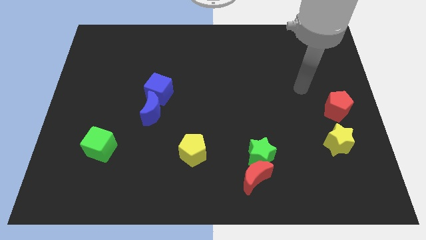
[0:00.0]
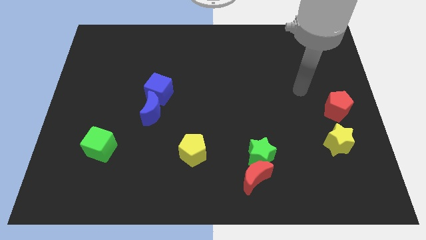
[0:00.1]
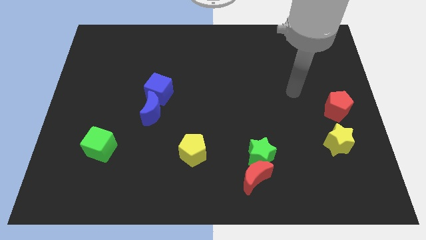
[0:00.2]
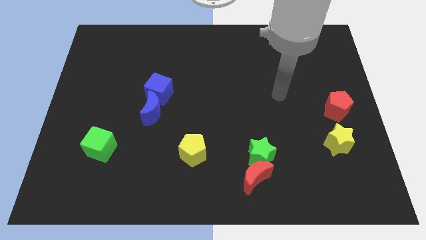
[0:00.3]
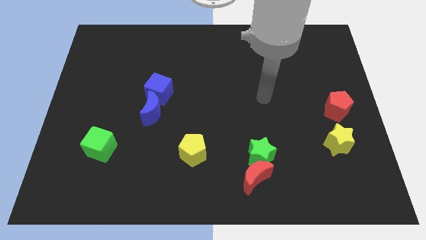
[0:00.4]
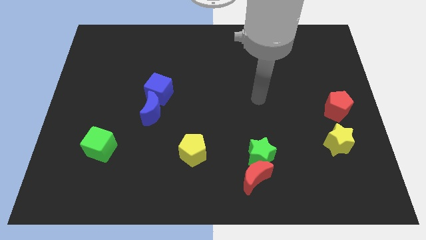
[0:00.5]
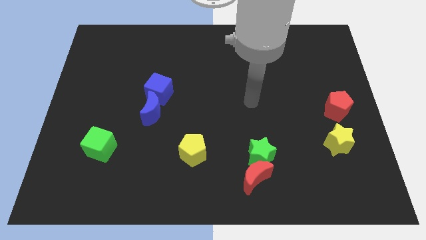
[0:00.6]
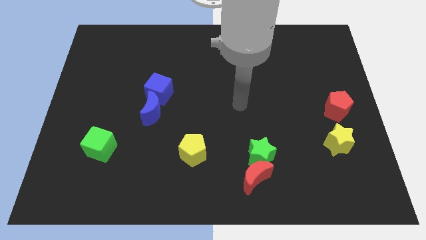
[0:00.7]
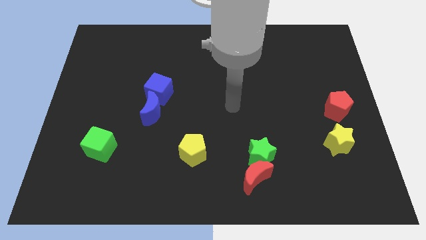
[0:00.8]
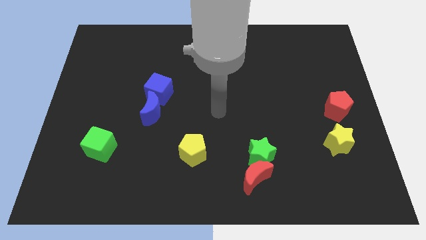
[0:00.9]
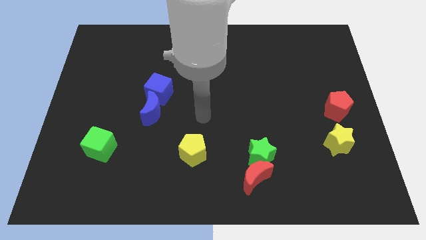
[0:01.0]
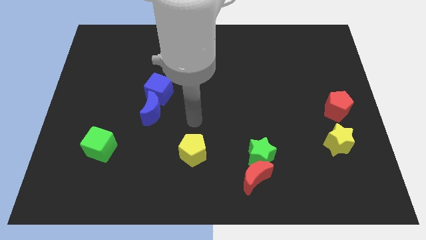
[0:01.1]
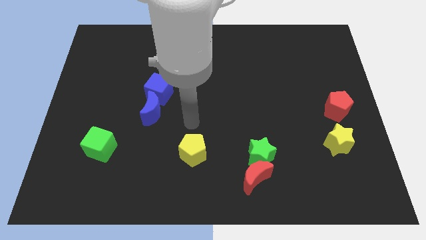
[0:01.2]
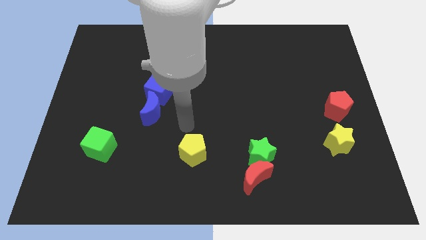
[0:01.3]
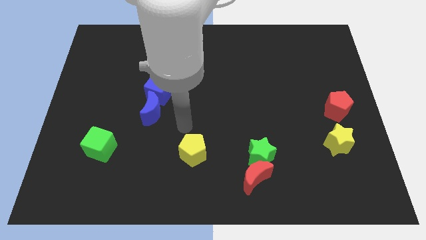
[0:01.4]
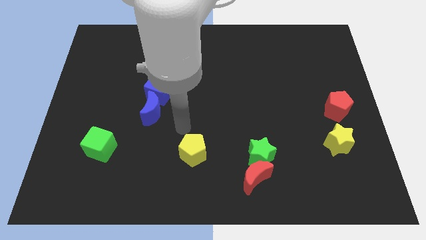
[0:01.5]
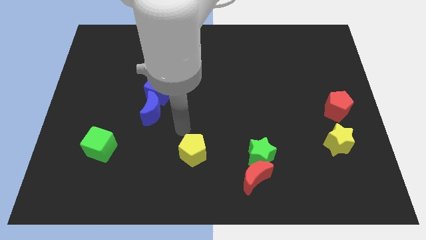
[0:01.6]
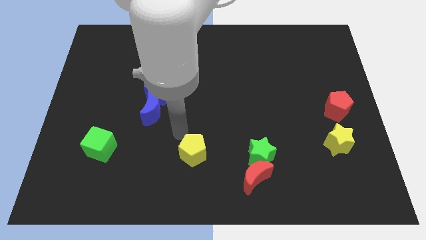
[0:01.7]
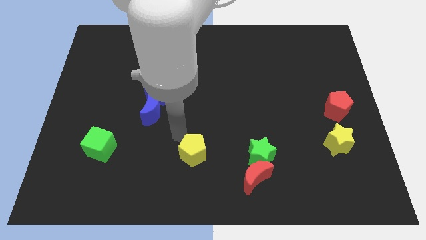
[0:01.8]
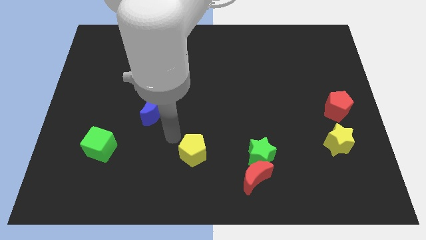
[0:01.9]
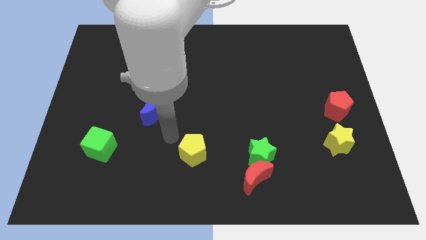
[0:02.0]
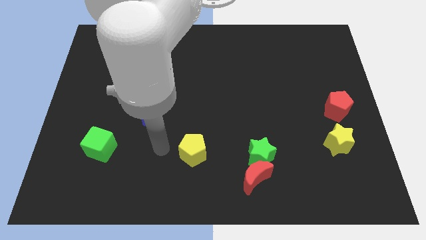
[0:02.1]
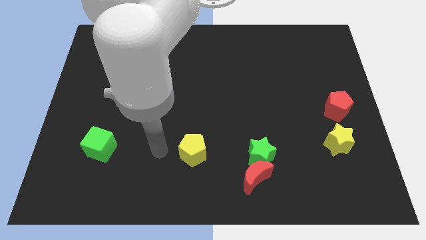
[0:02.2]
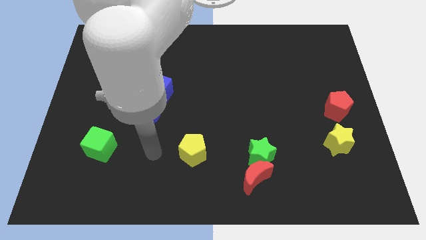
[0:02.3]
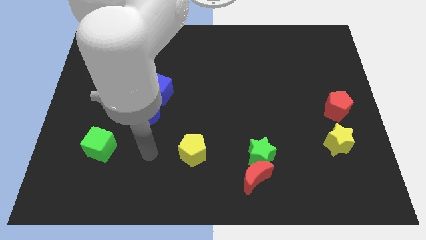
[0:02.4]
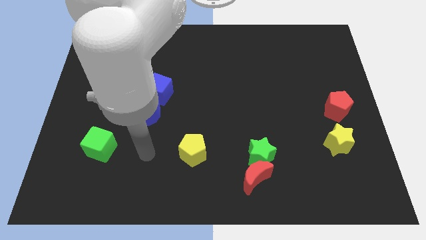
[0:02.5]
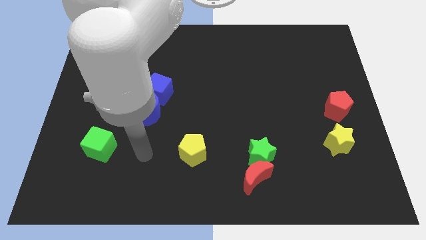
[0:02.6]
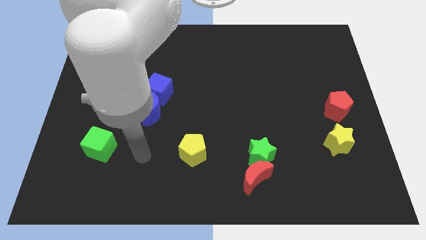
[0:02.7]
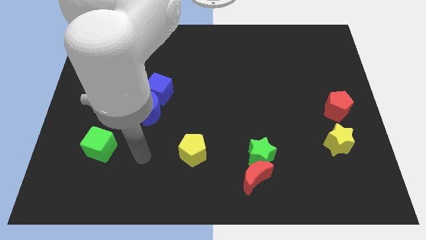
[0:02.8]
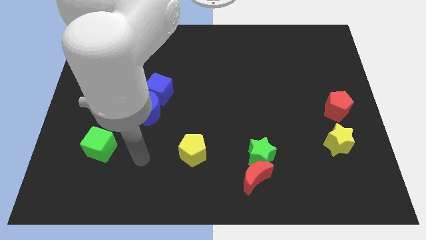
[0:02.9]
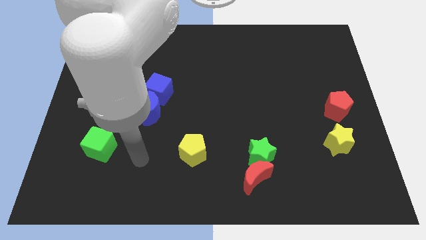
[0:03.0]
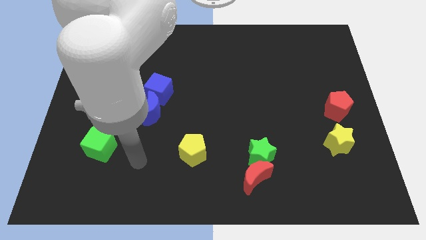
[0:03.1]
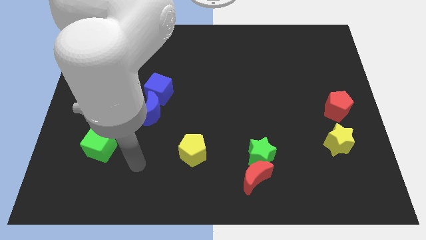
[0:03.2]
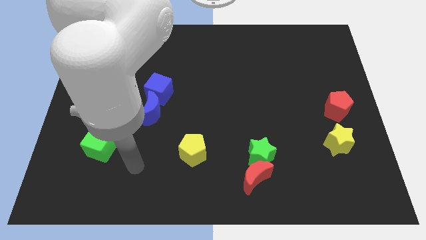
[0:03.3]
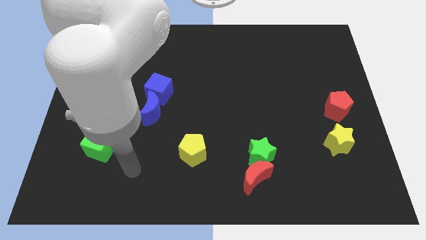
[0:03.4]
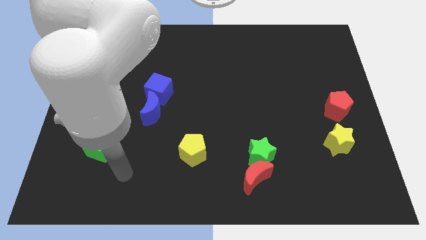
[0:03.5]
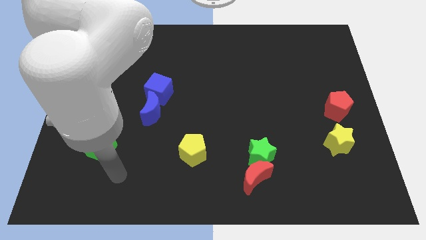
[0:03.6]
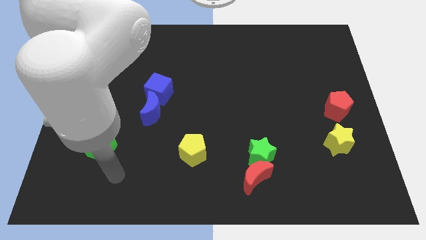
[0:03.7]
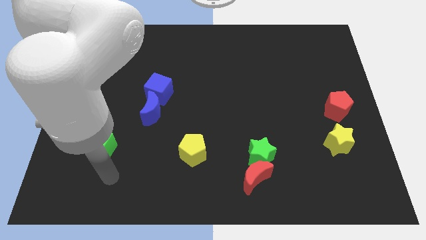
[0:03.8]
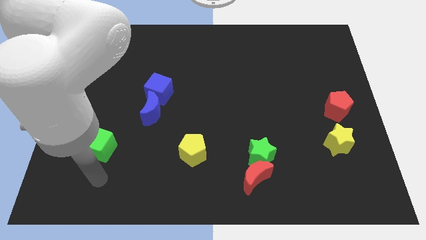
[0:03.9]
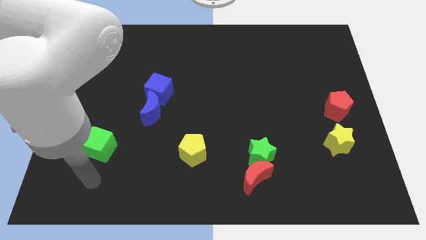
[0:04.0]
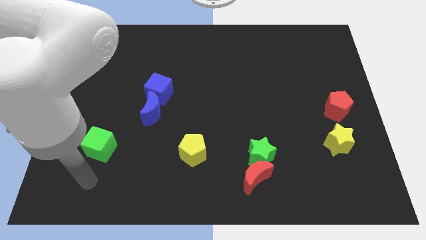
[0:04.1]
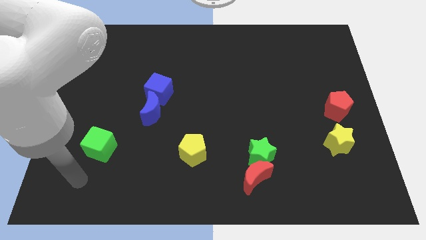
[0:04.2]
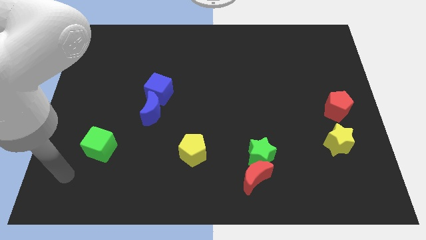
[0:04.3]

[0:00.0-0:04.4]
move your arm below the green cube

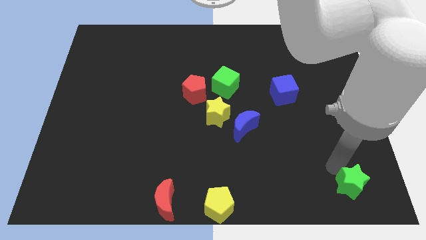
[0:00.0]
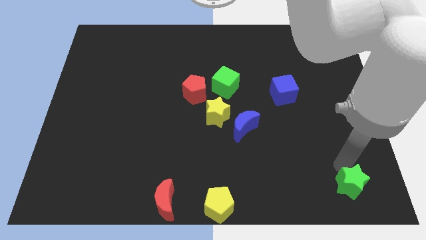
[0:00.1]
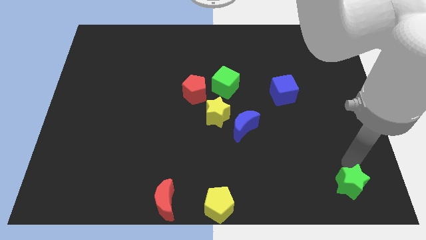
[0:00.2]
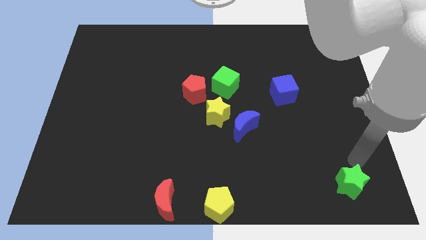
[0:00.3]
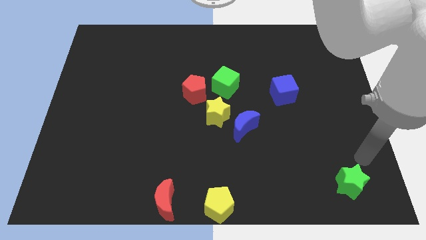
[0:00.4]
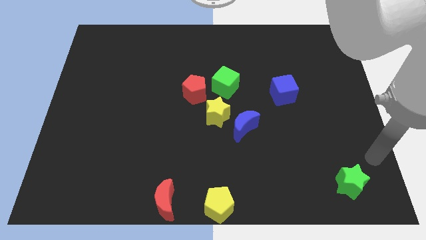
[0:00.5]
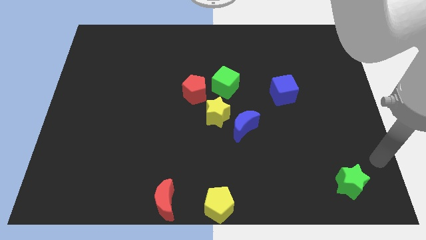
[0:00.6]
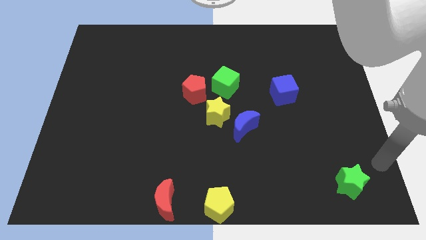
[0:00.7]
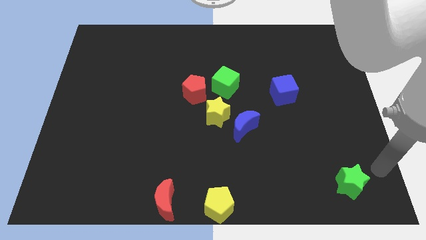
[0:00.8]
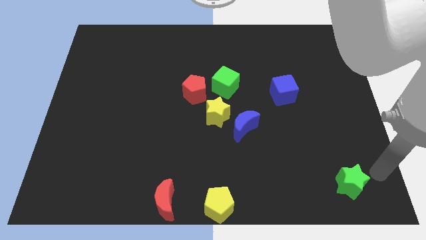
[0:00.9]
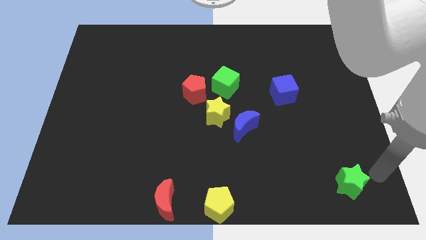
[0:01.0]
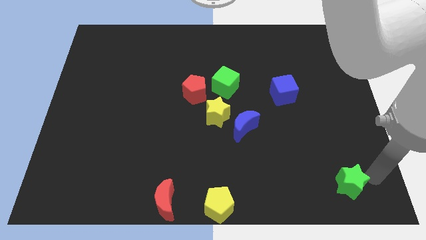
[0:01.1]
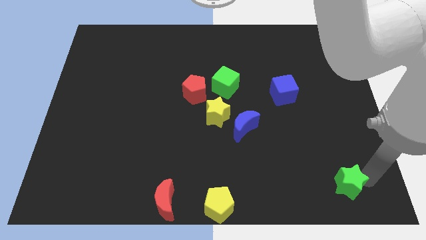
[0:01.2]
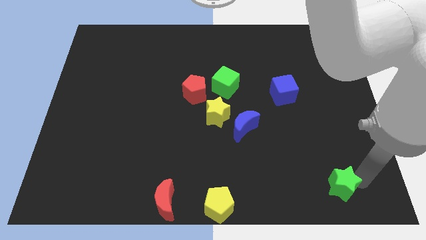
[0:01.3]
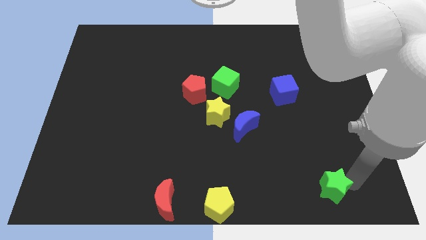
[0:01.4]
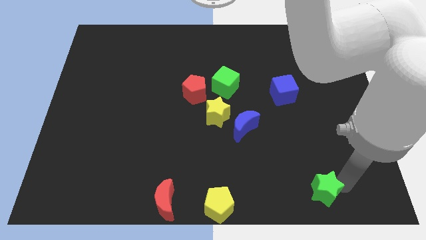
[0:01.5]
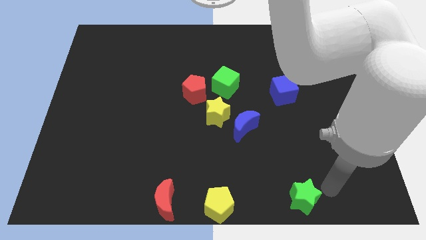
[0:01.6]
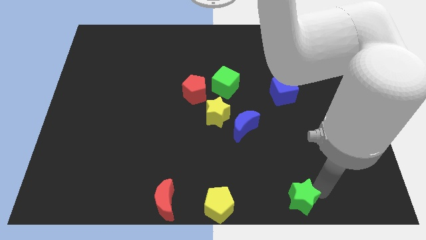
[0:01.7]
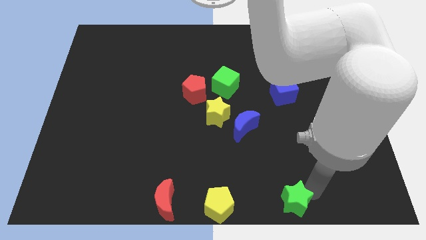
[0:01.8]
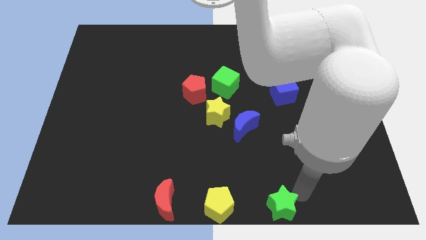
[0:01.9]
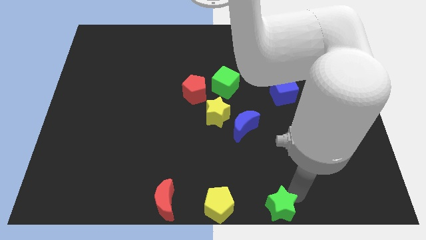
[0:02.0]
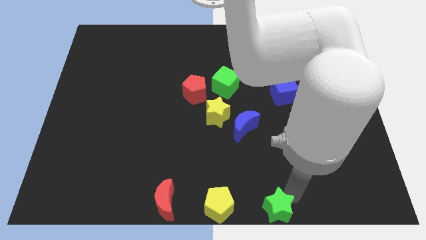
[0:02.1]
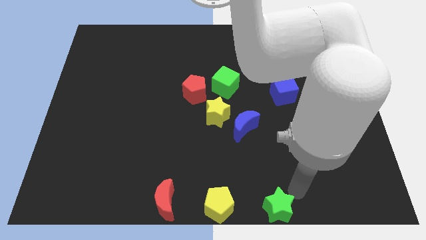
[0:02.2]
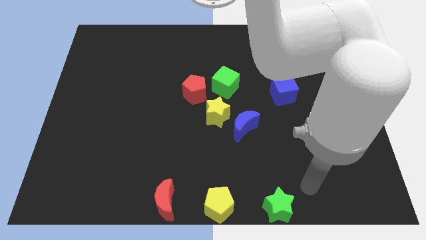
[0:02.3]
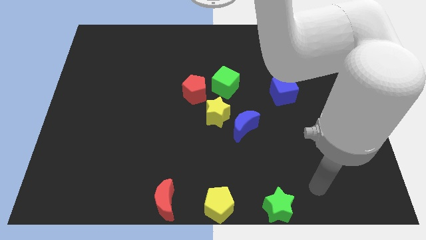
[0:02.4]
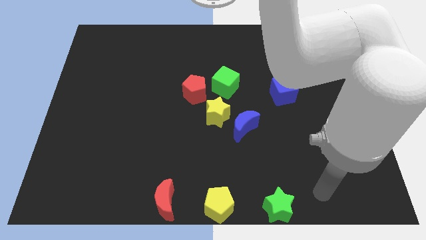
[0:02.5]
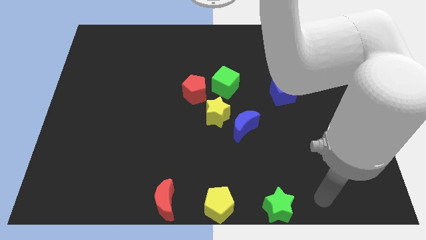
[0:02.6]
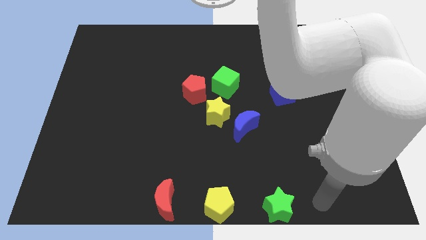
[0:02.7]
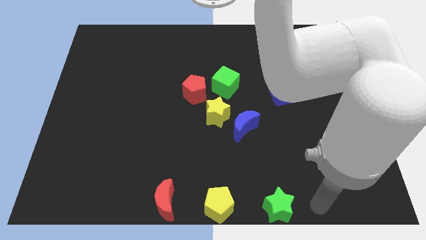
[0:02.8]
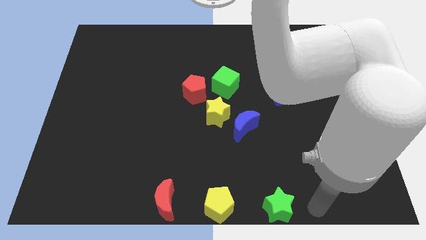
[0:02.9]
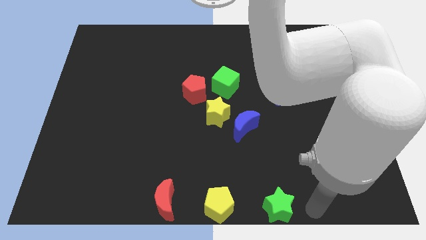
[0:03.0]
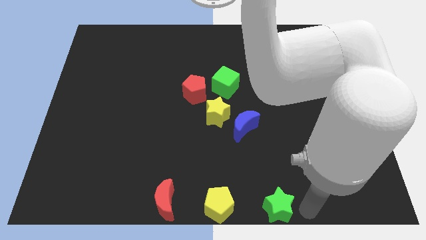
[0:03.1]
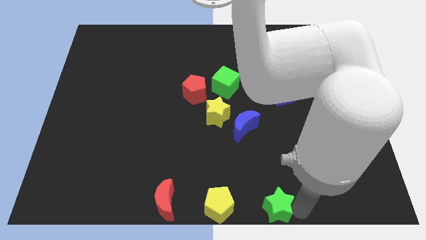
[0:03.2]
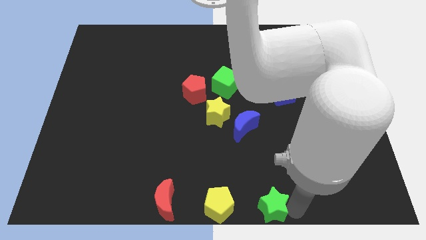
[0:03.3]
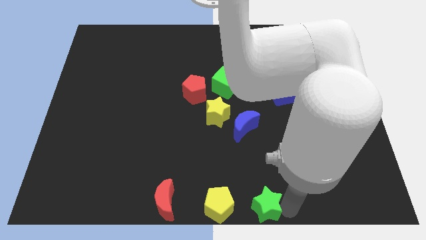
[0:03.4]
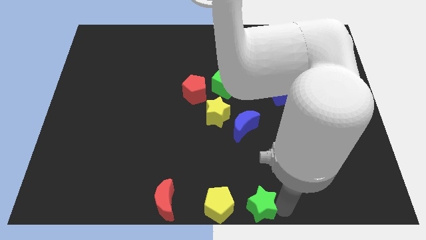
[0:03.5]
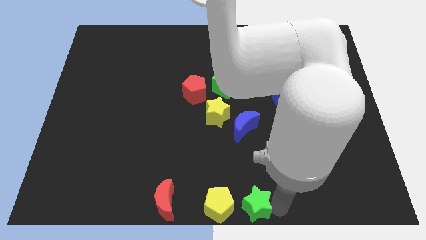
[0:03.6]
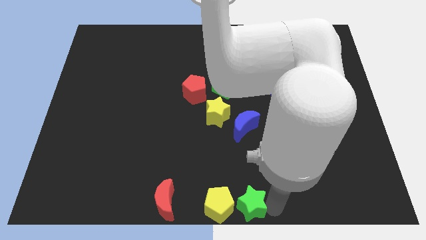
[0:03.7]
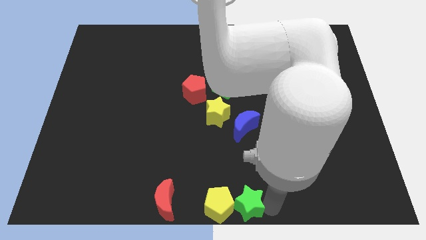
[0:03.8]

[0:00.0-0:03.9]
place the green star to the right side of the yellow pentagon

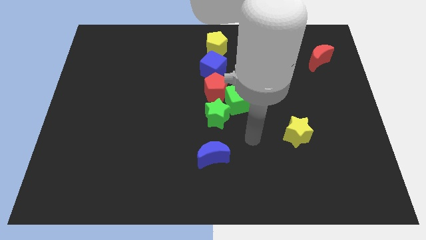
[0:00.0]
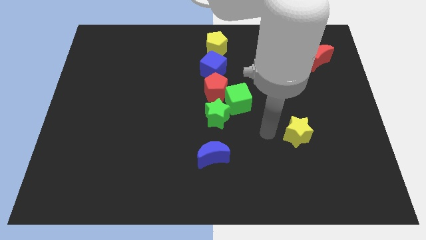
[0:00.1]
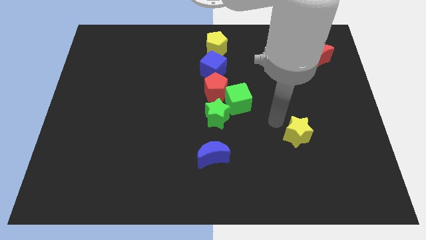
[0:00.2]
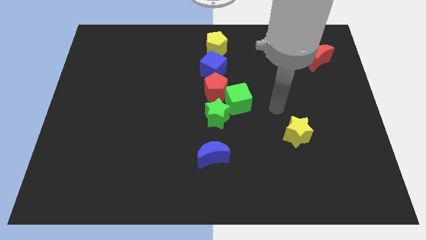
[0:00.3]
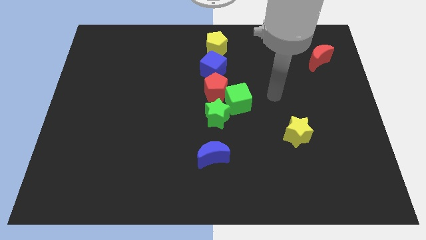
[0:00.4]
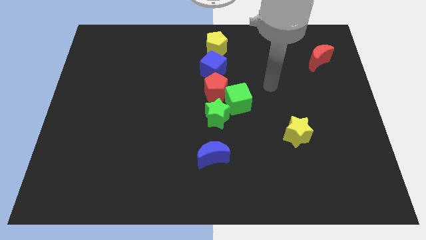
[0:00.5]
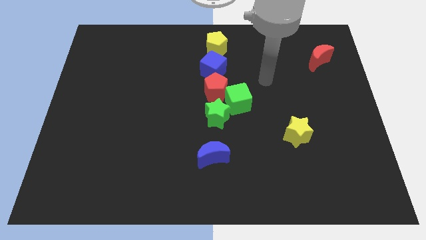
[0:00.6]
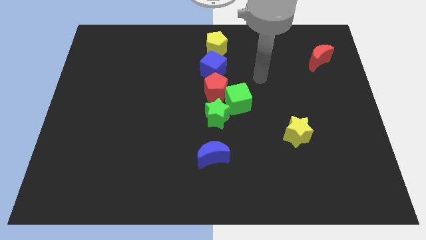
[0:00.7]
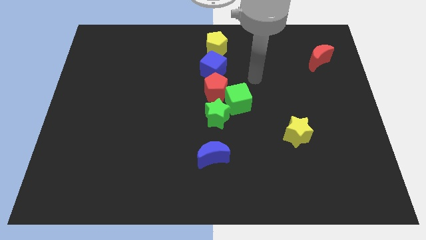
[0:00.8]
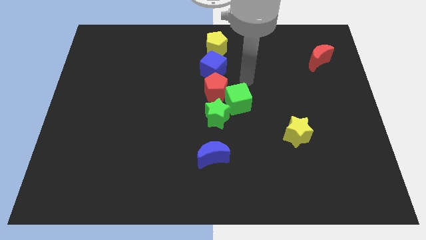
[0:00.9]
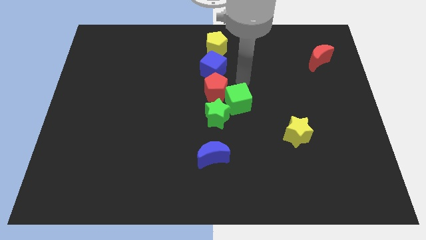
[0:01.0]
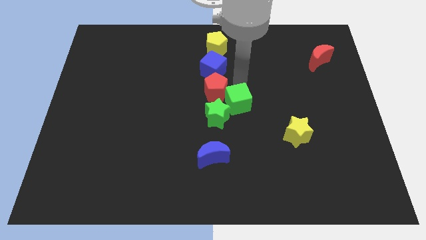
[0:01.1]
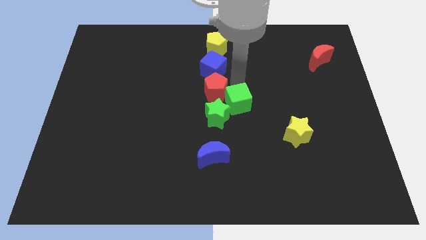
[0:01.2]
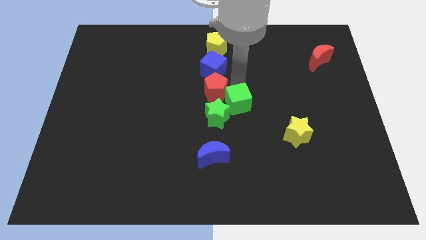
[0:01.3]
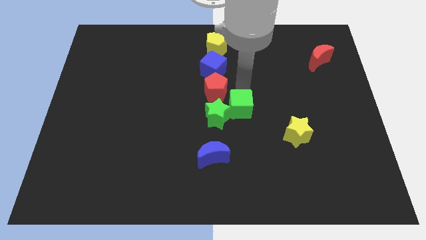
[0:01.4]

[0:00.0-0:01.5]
slightly tap the green square
